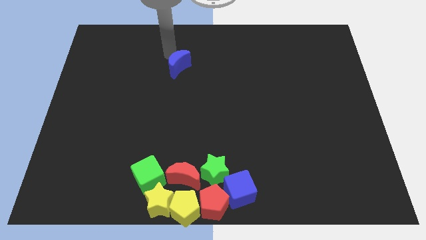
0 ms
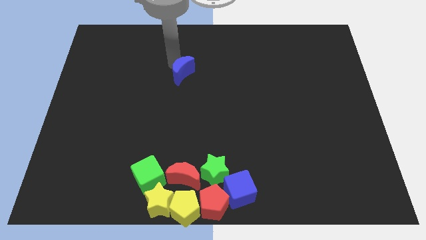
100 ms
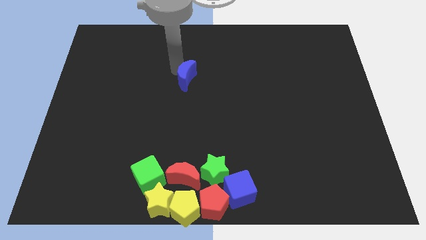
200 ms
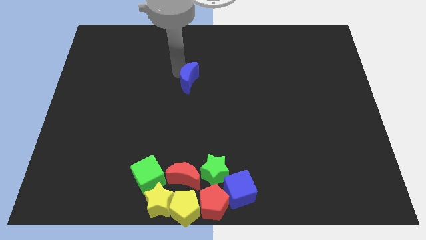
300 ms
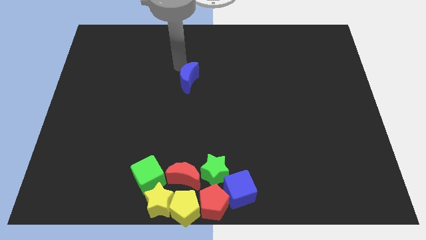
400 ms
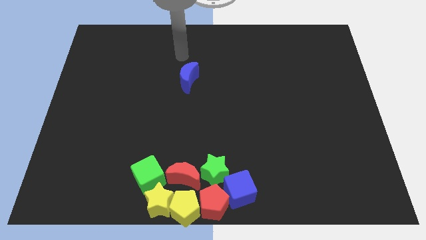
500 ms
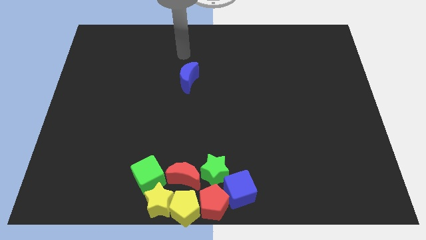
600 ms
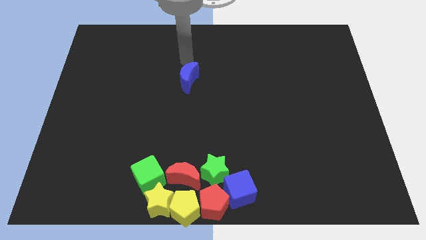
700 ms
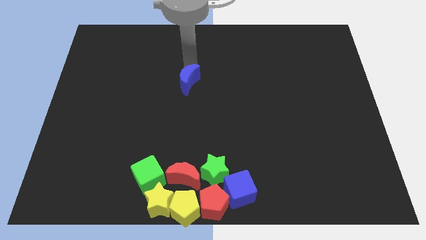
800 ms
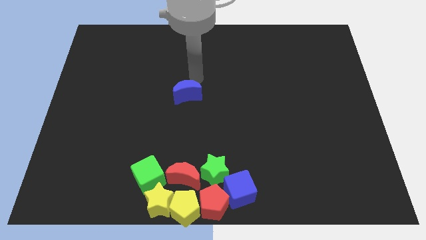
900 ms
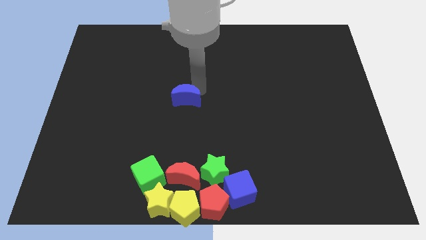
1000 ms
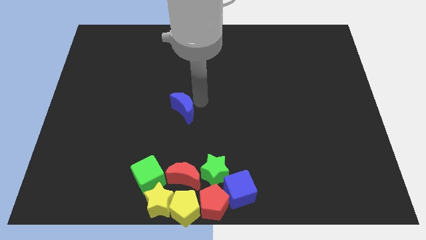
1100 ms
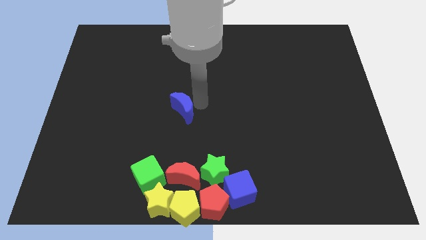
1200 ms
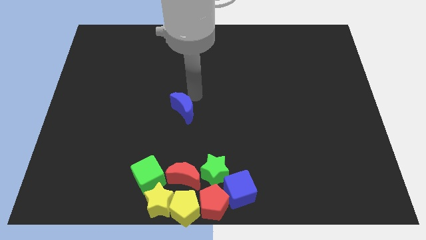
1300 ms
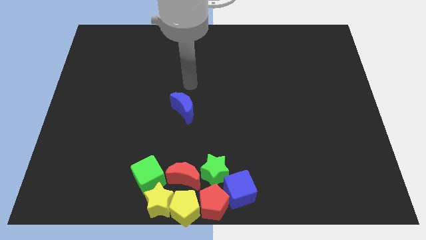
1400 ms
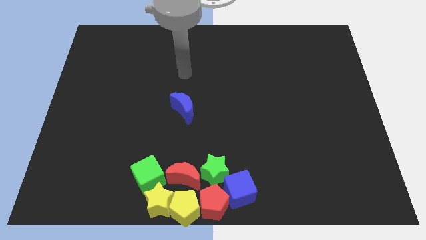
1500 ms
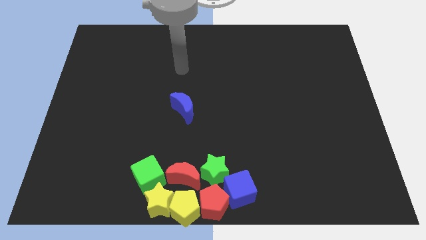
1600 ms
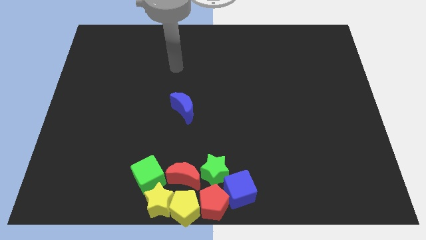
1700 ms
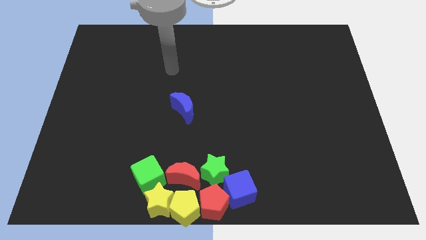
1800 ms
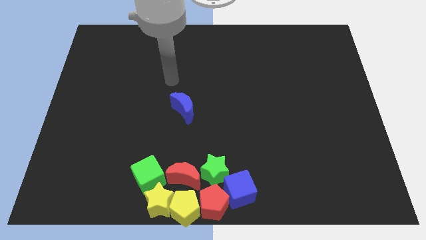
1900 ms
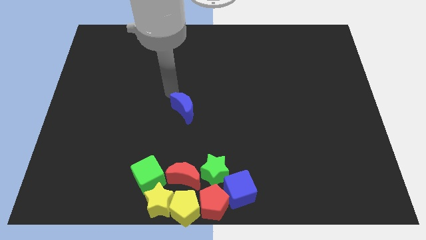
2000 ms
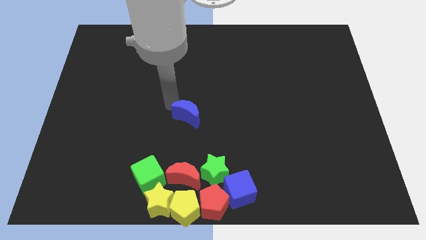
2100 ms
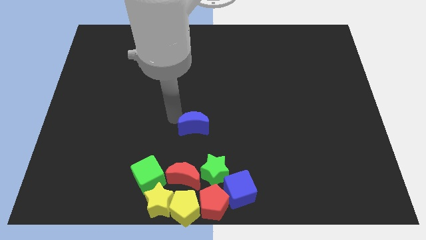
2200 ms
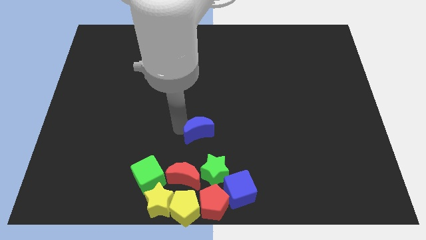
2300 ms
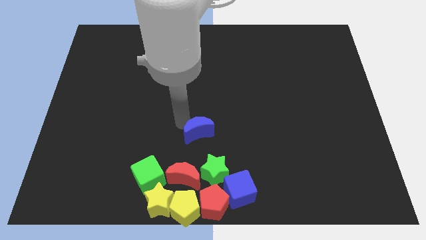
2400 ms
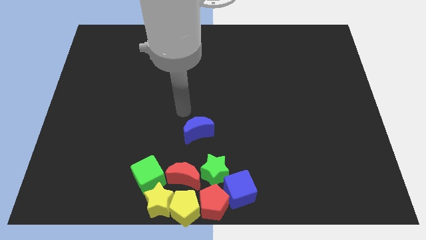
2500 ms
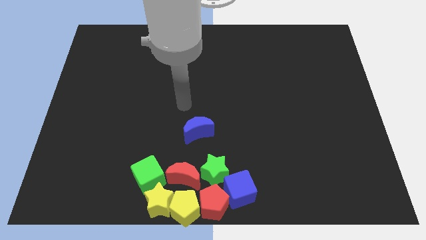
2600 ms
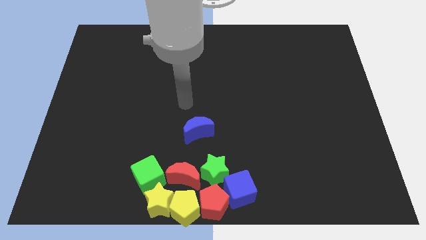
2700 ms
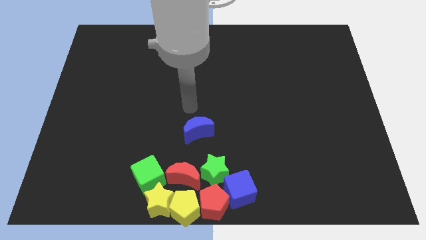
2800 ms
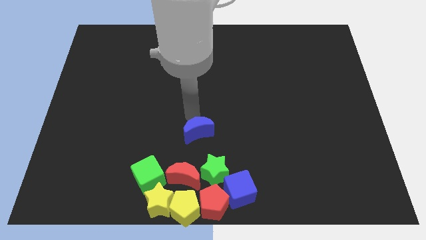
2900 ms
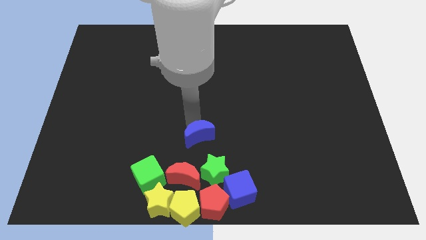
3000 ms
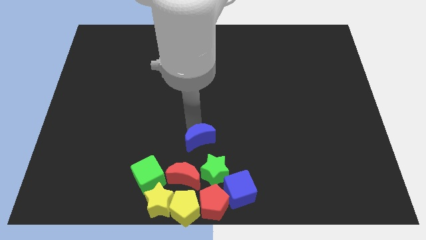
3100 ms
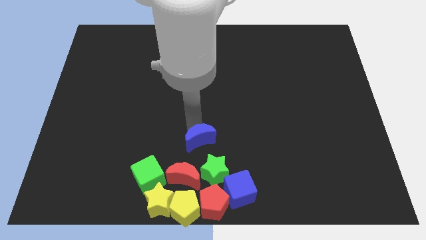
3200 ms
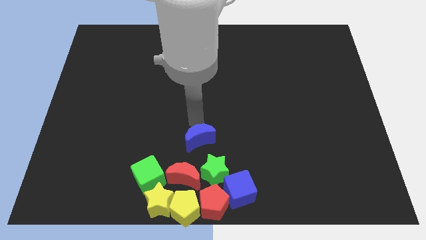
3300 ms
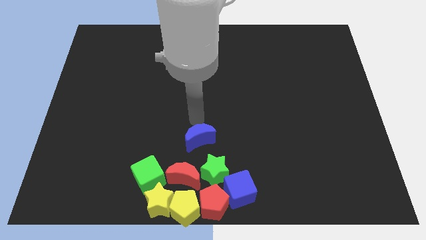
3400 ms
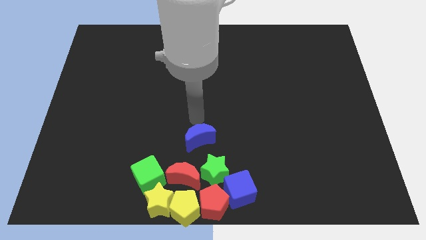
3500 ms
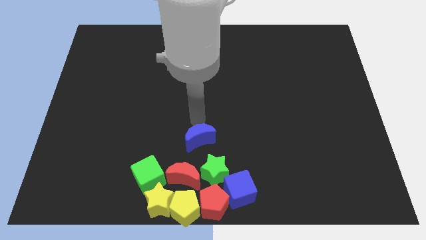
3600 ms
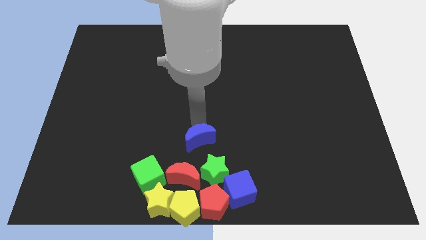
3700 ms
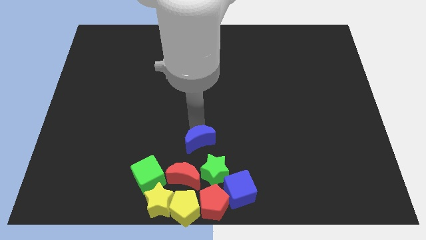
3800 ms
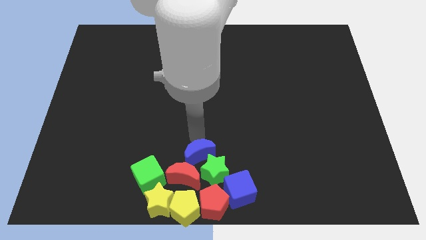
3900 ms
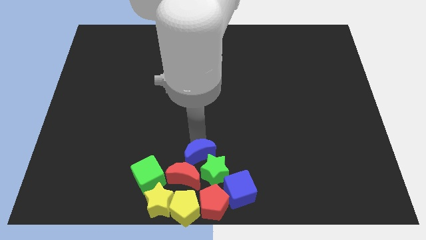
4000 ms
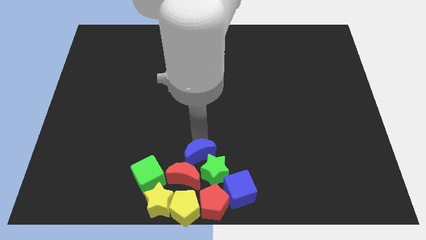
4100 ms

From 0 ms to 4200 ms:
push the blue crescent top left to the green star

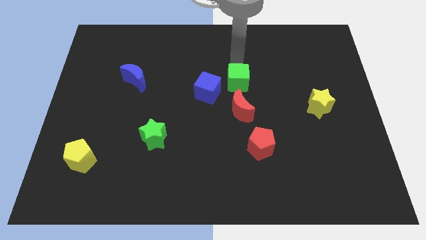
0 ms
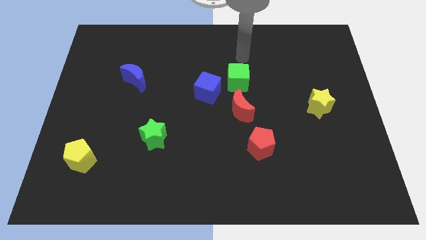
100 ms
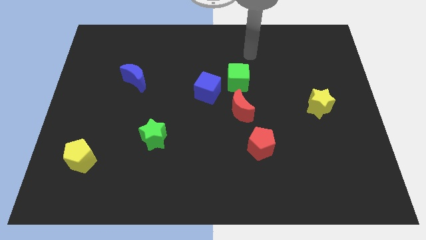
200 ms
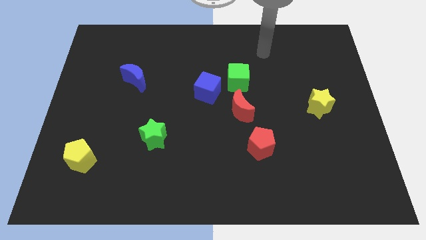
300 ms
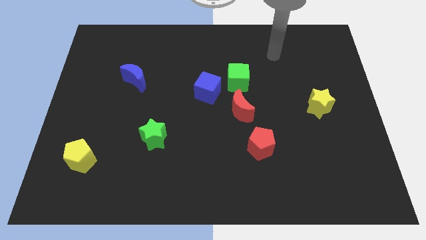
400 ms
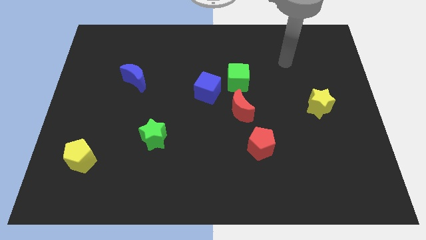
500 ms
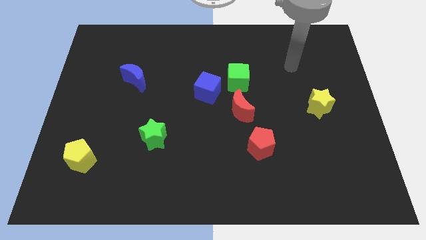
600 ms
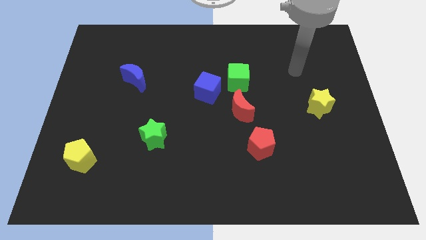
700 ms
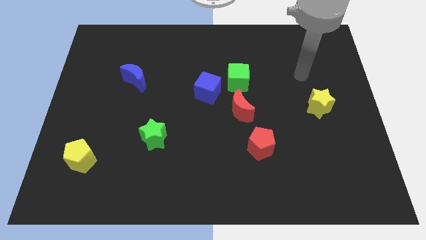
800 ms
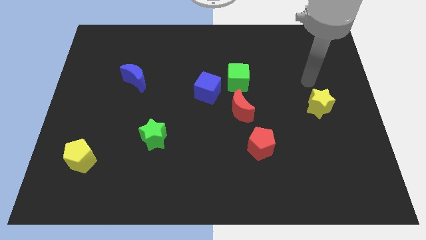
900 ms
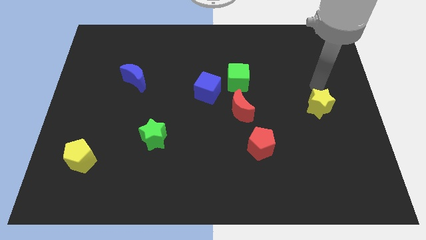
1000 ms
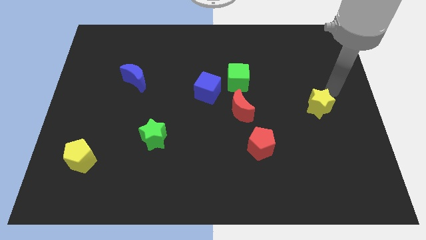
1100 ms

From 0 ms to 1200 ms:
move your arm to the top of the yellow star

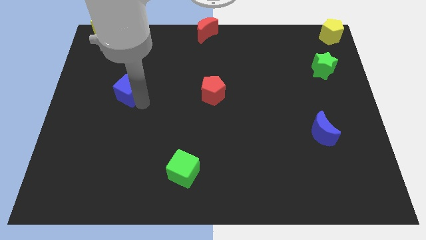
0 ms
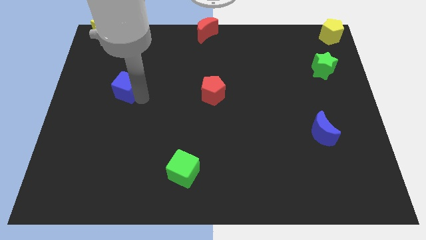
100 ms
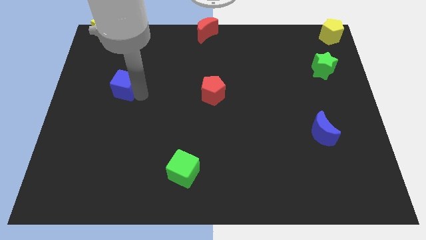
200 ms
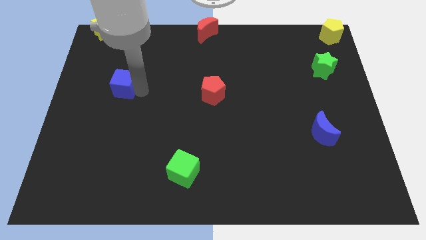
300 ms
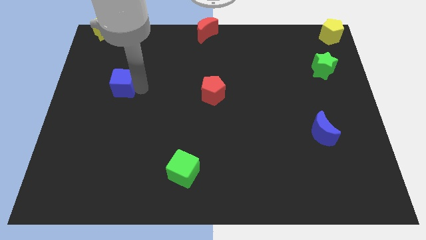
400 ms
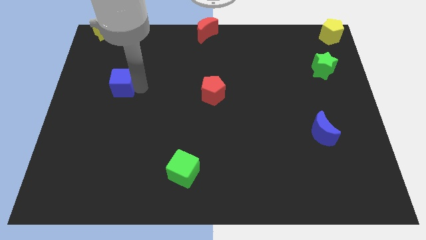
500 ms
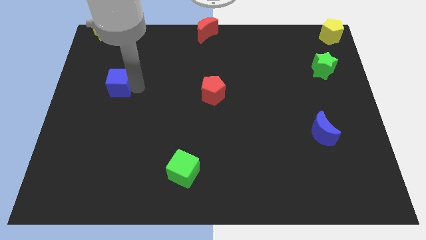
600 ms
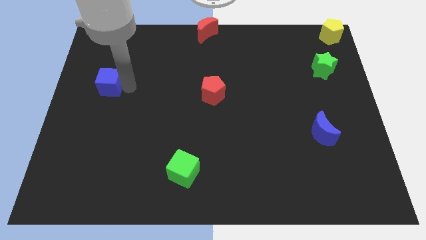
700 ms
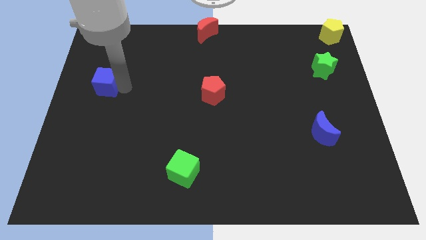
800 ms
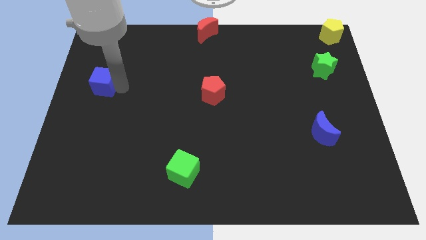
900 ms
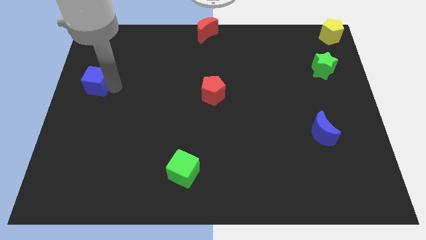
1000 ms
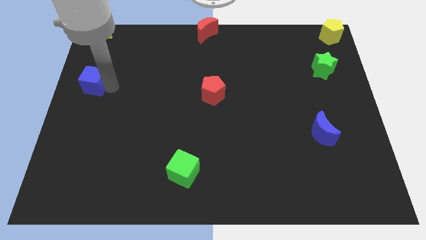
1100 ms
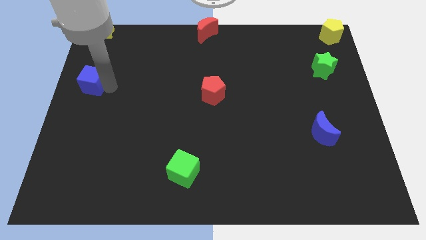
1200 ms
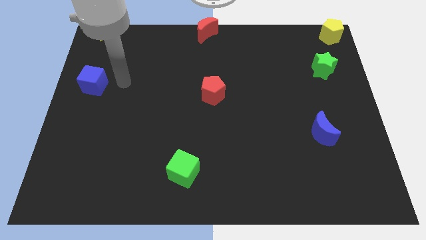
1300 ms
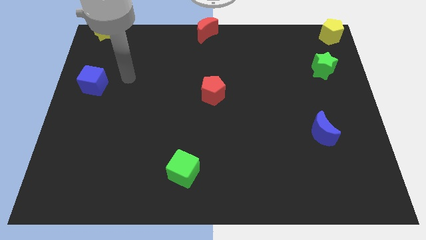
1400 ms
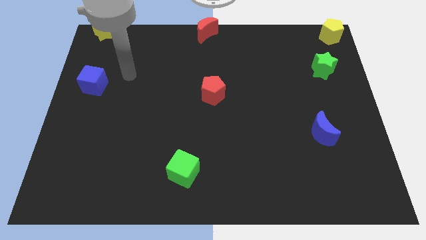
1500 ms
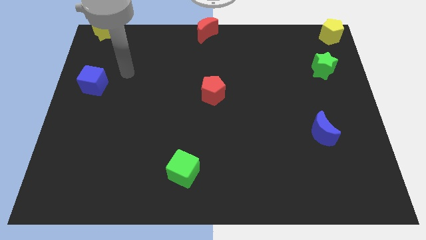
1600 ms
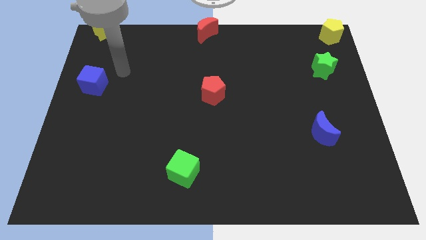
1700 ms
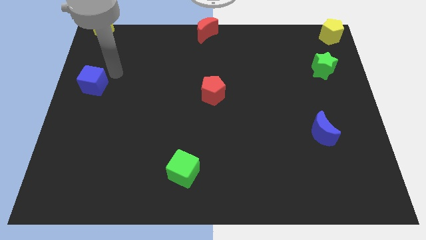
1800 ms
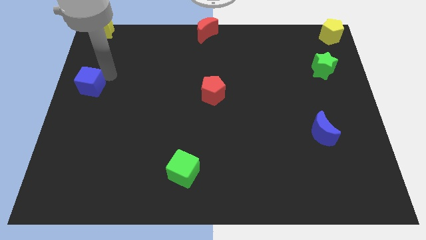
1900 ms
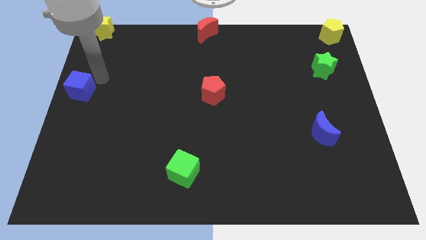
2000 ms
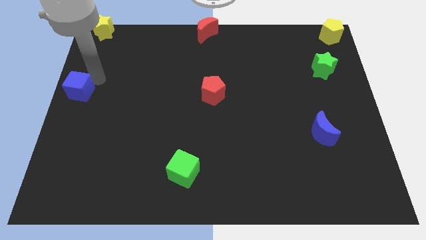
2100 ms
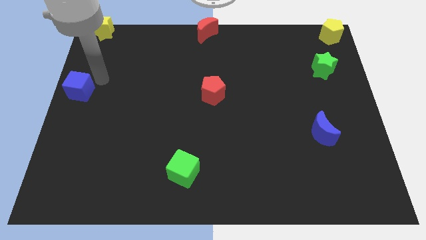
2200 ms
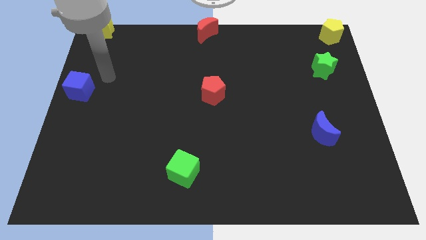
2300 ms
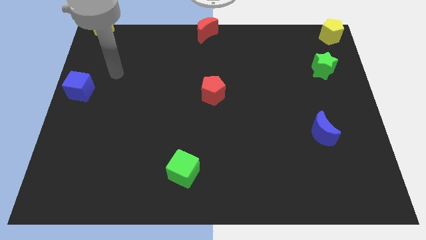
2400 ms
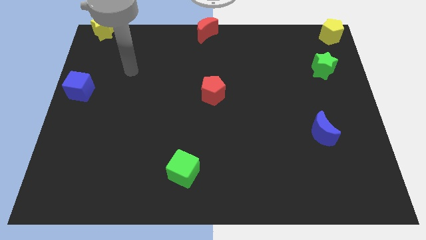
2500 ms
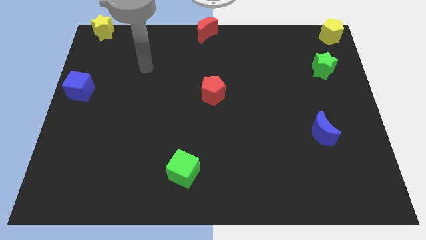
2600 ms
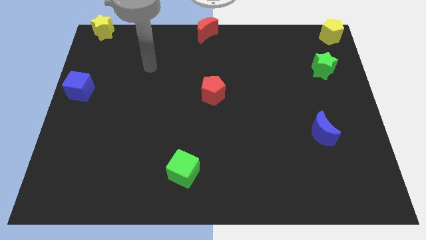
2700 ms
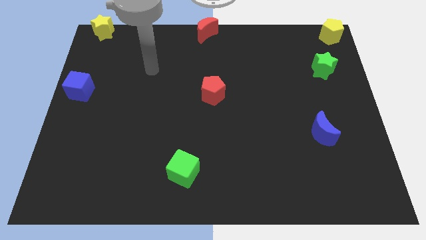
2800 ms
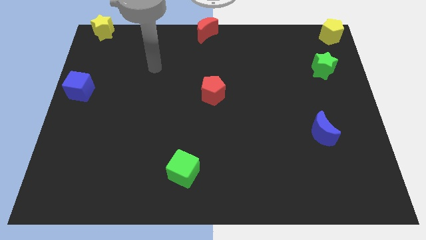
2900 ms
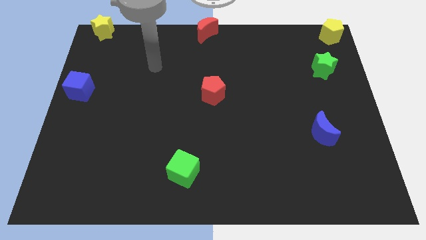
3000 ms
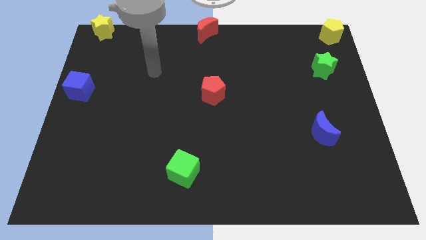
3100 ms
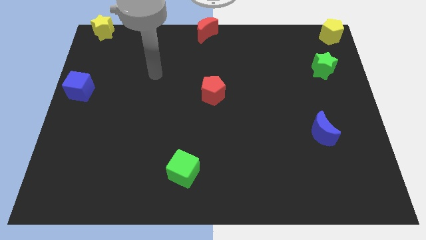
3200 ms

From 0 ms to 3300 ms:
place the blue cube at the center left of the board

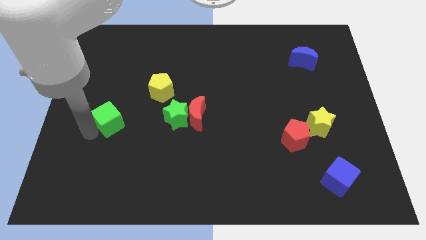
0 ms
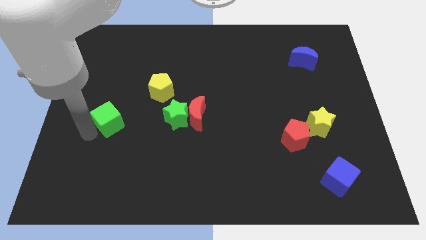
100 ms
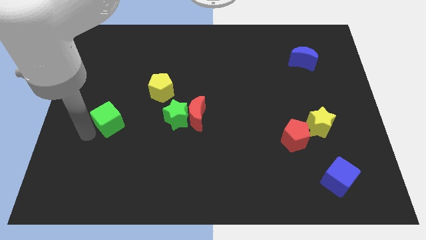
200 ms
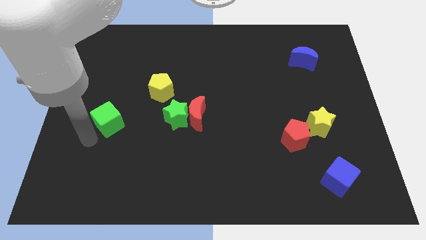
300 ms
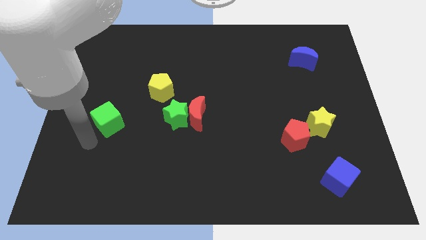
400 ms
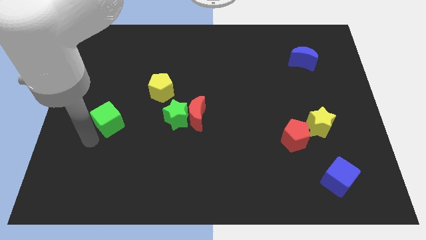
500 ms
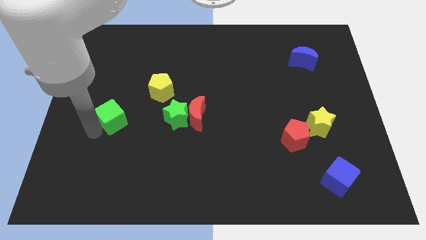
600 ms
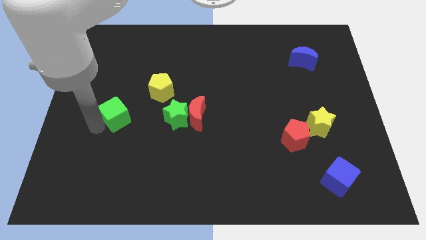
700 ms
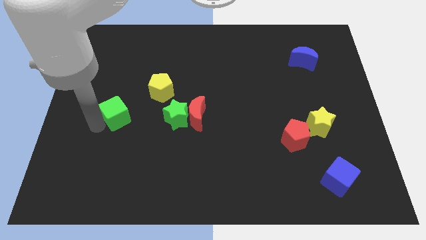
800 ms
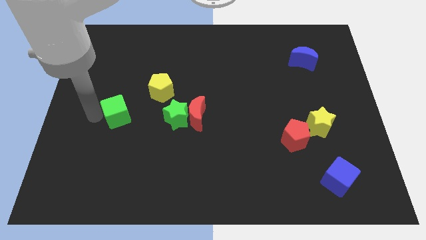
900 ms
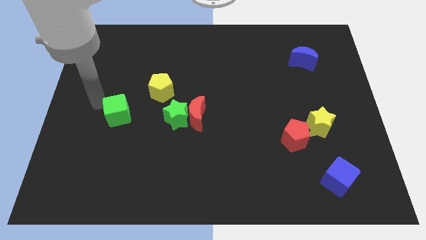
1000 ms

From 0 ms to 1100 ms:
place the green cube horizontally to the left side of the green star
